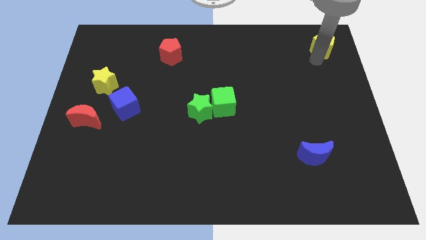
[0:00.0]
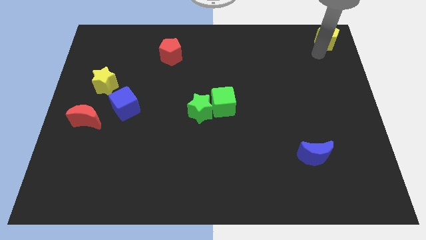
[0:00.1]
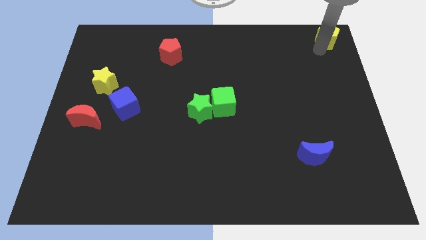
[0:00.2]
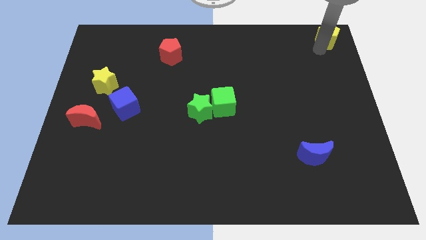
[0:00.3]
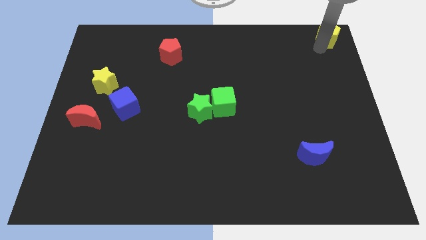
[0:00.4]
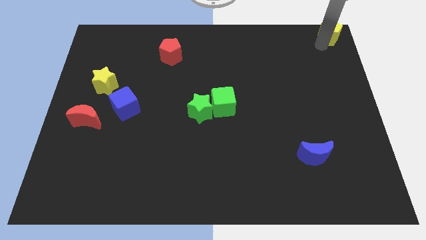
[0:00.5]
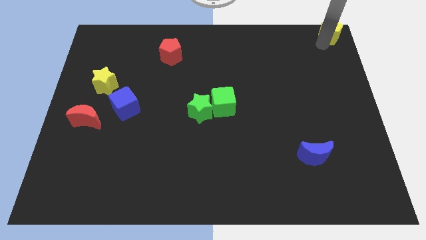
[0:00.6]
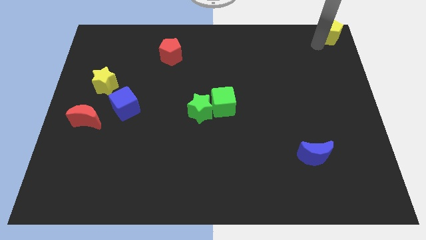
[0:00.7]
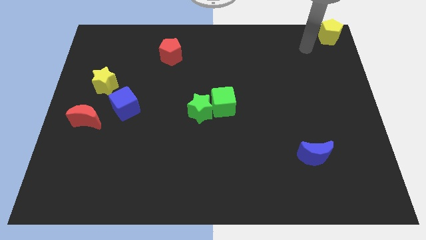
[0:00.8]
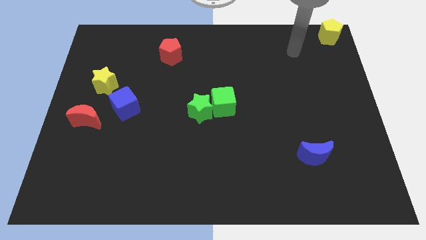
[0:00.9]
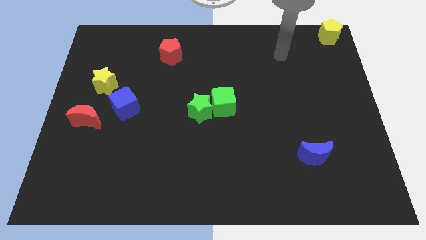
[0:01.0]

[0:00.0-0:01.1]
push the yellow pentagon to the top right of the board

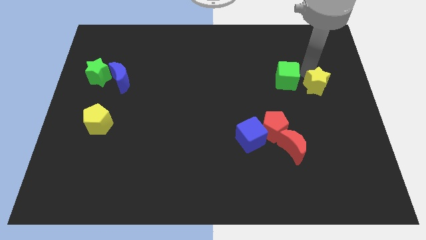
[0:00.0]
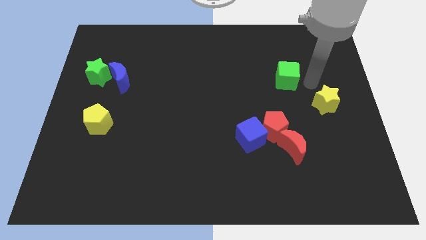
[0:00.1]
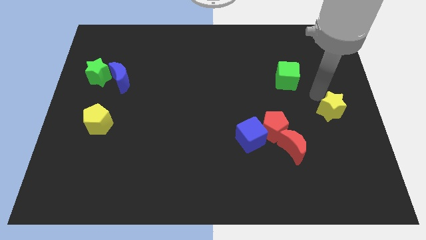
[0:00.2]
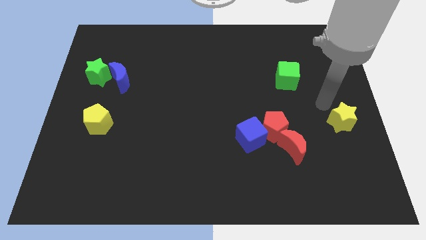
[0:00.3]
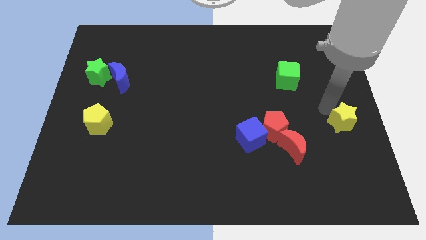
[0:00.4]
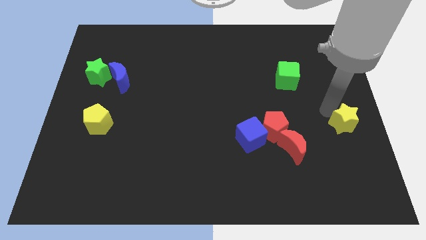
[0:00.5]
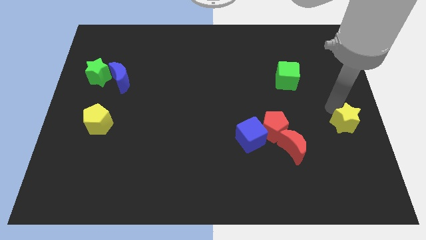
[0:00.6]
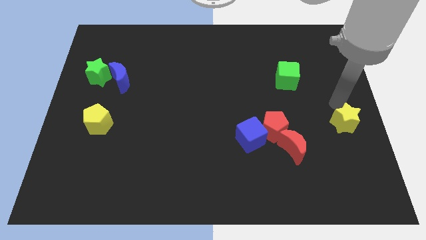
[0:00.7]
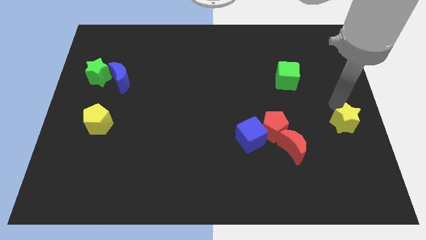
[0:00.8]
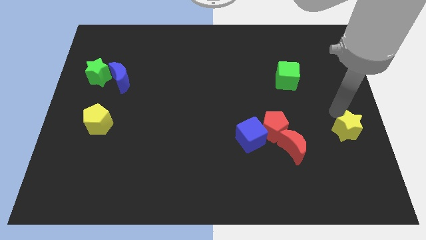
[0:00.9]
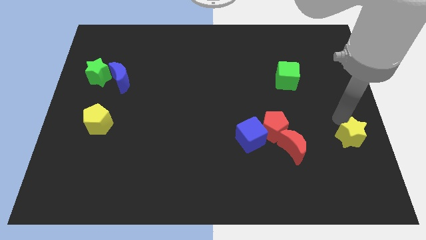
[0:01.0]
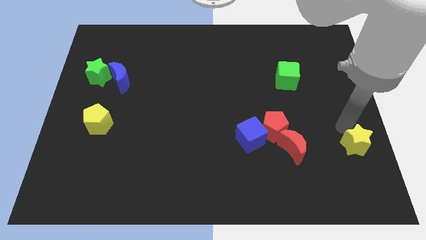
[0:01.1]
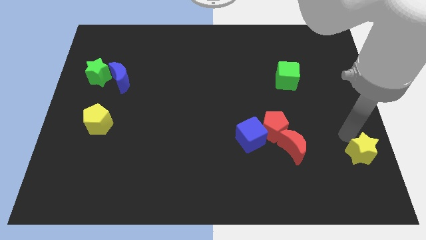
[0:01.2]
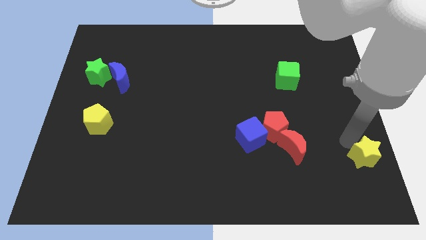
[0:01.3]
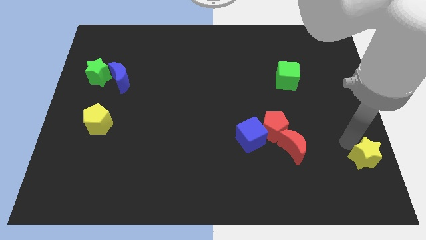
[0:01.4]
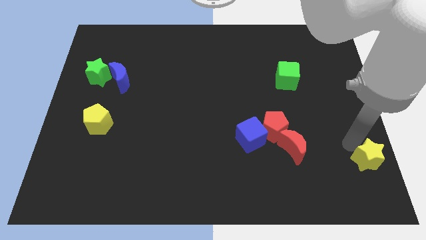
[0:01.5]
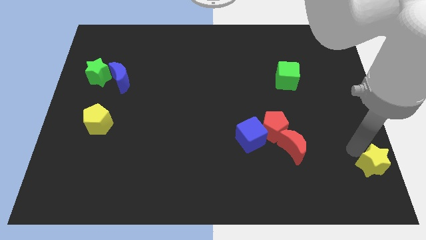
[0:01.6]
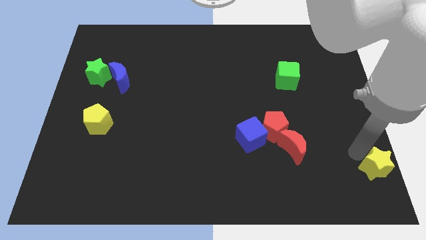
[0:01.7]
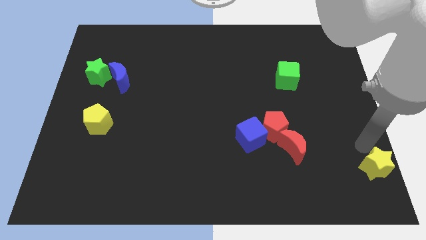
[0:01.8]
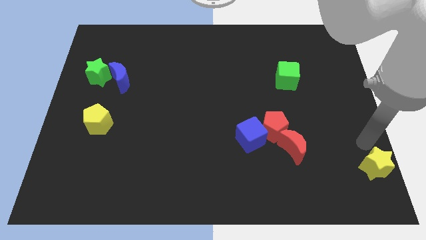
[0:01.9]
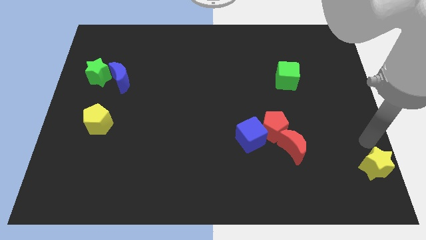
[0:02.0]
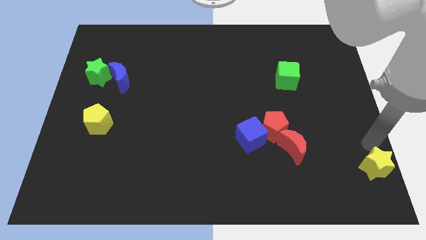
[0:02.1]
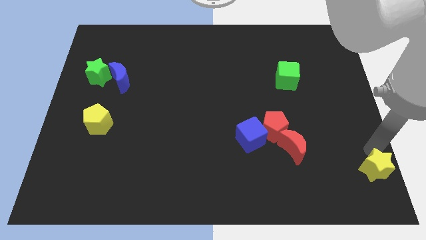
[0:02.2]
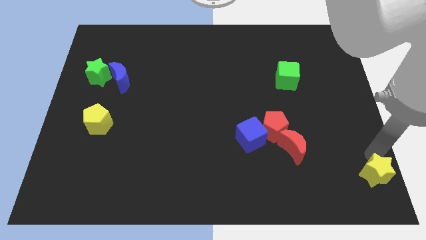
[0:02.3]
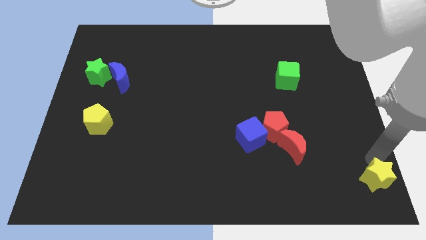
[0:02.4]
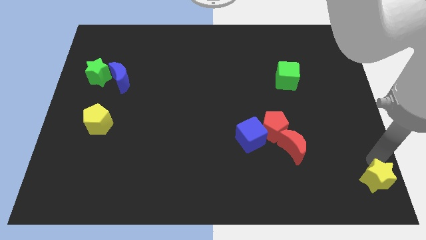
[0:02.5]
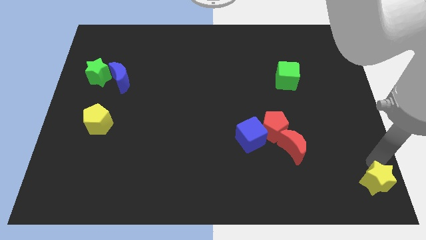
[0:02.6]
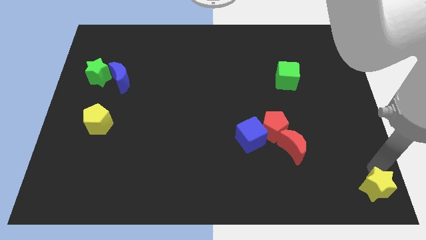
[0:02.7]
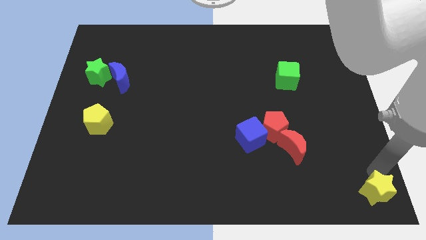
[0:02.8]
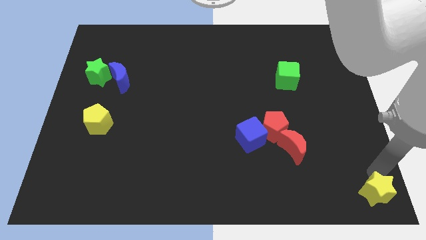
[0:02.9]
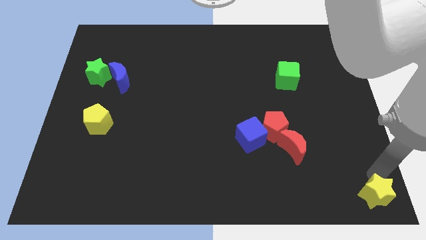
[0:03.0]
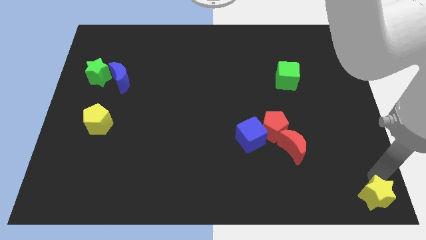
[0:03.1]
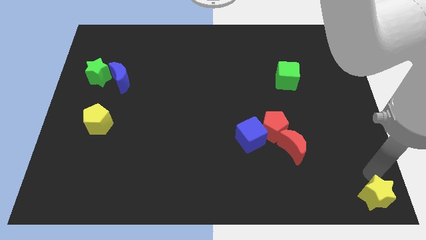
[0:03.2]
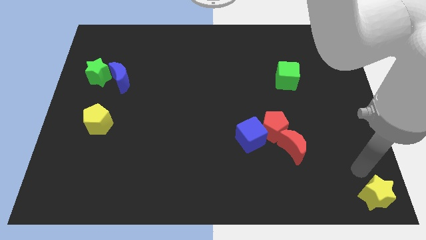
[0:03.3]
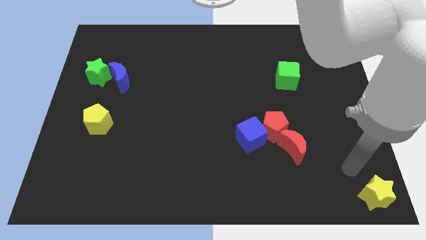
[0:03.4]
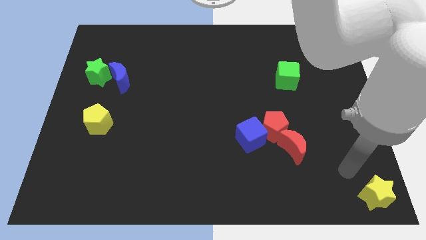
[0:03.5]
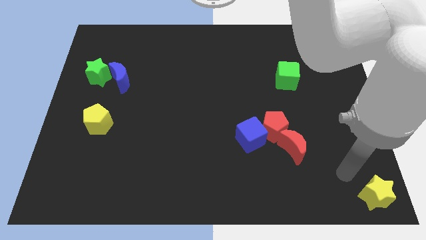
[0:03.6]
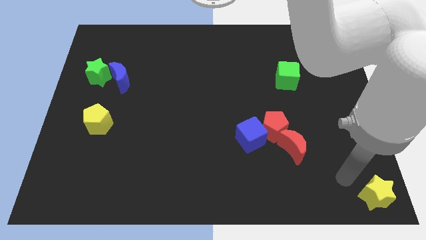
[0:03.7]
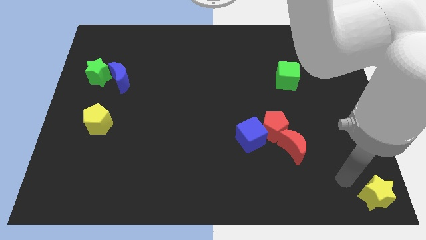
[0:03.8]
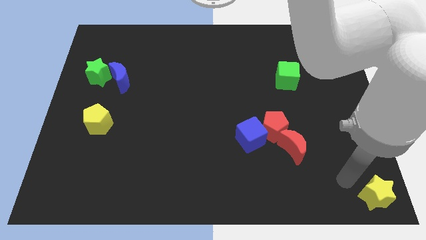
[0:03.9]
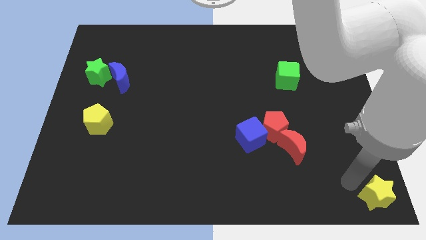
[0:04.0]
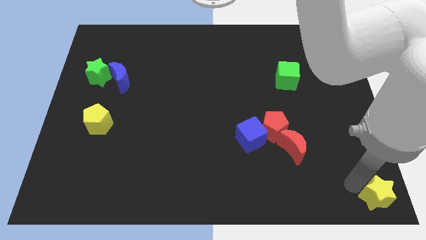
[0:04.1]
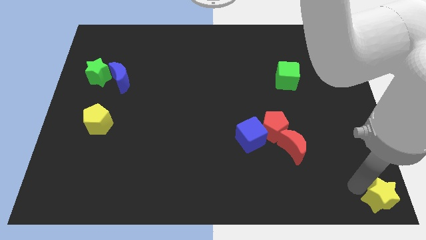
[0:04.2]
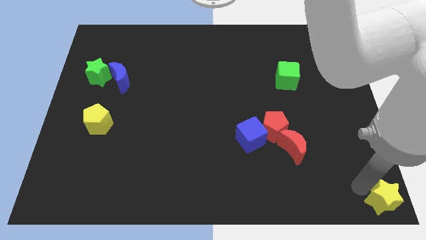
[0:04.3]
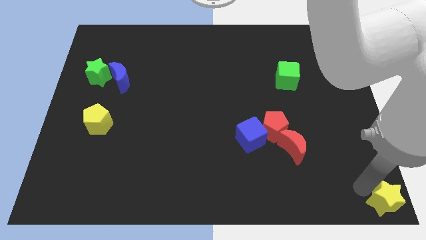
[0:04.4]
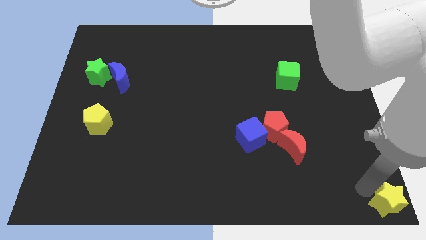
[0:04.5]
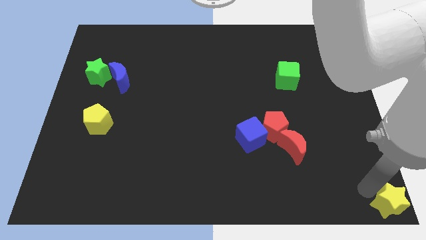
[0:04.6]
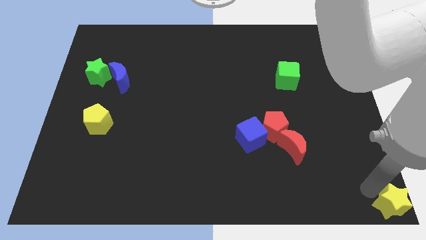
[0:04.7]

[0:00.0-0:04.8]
place the yellow star at the bottom right corner of the board

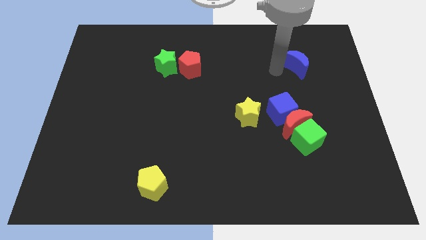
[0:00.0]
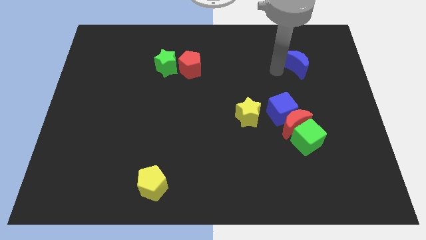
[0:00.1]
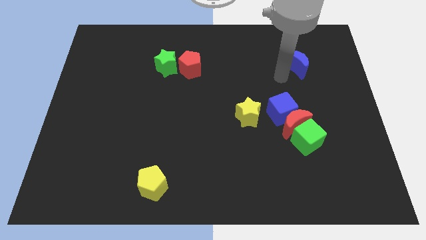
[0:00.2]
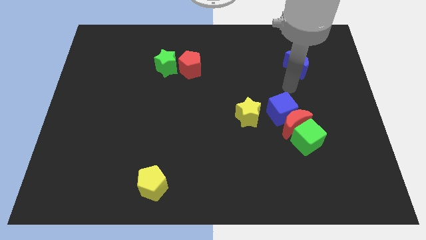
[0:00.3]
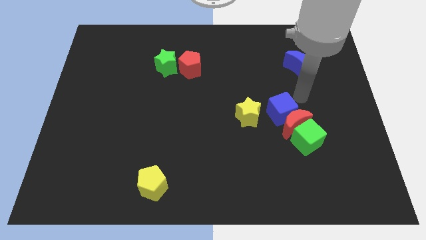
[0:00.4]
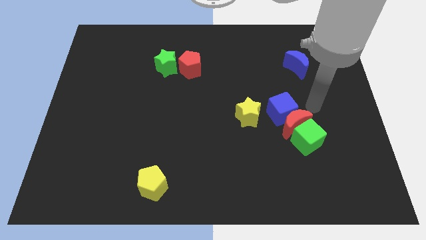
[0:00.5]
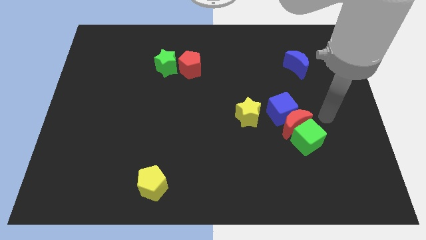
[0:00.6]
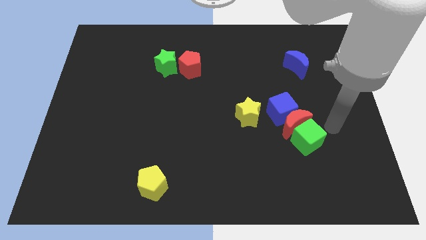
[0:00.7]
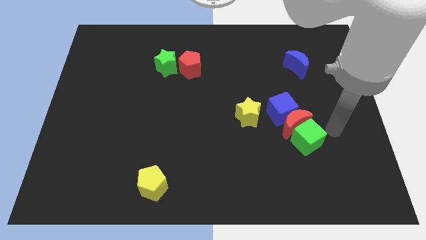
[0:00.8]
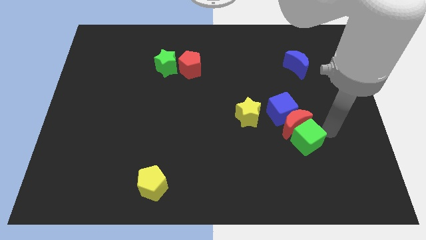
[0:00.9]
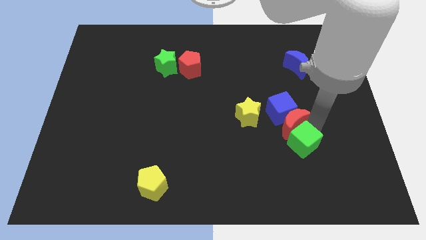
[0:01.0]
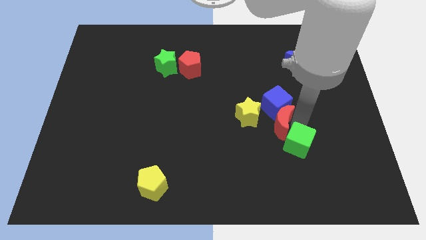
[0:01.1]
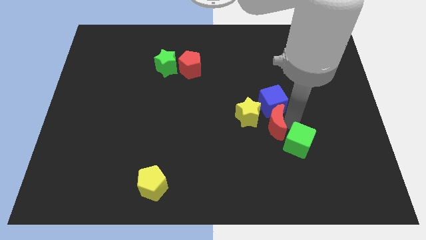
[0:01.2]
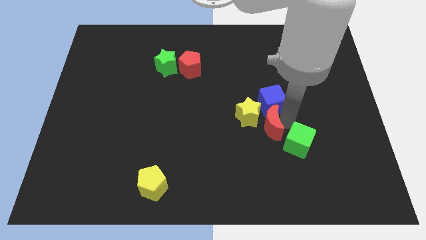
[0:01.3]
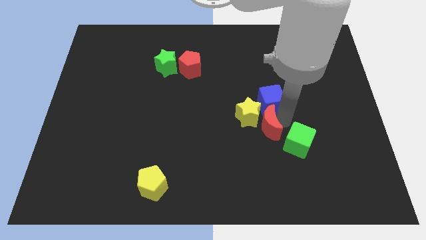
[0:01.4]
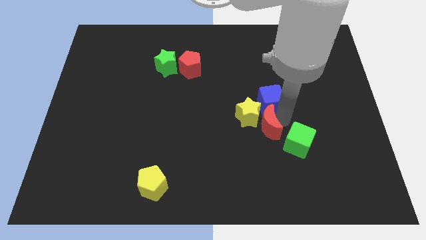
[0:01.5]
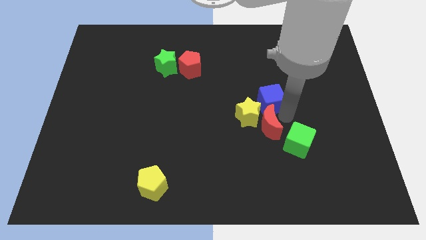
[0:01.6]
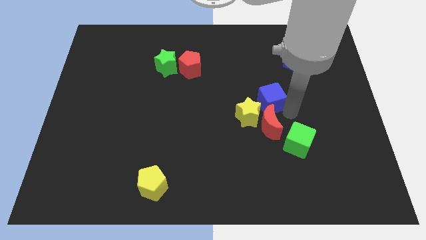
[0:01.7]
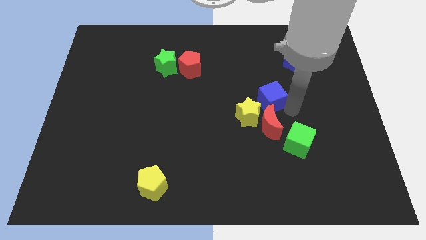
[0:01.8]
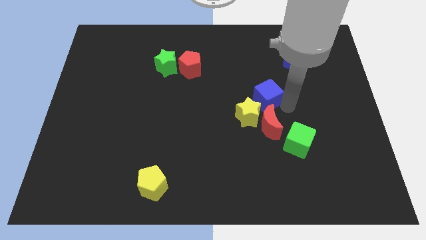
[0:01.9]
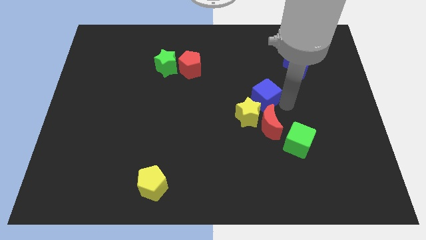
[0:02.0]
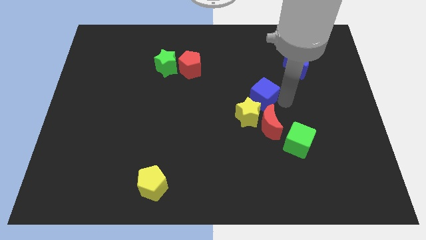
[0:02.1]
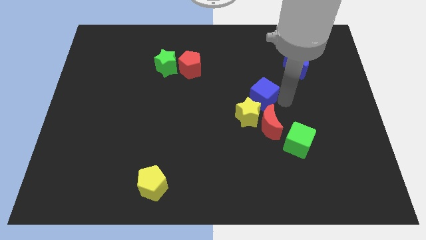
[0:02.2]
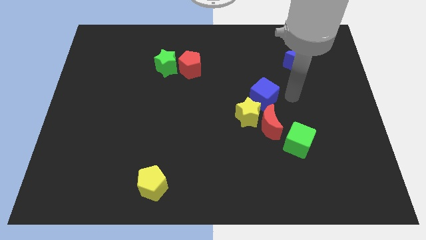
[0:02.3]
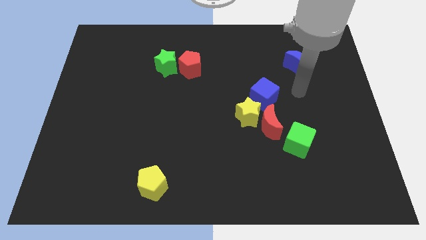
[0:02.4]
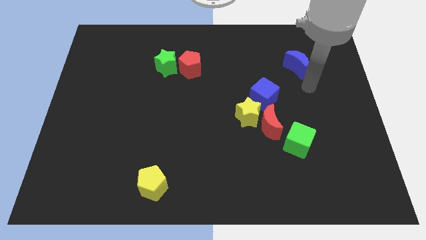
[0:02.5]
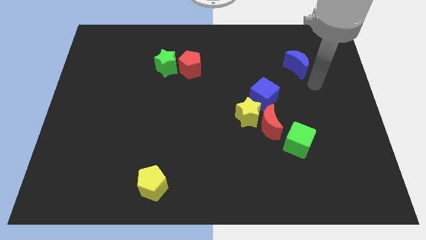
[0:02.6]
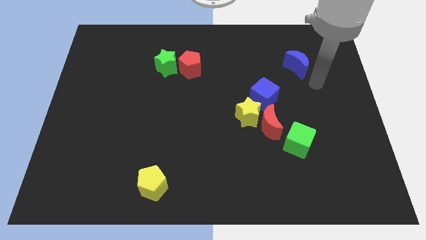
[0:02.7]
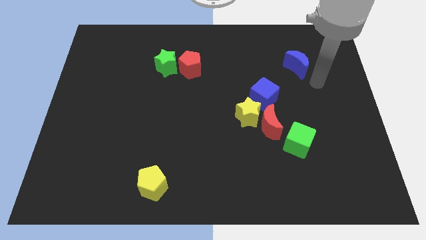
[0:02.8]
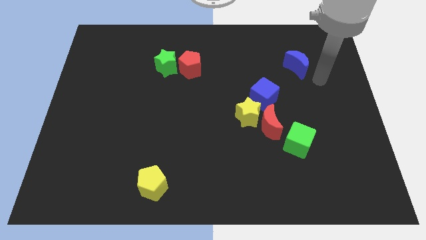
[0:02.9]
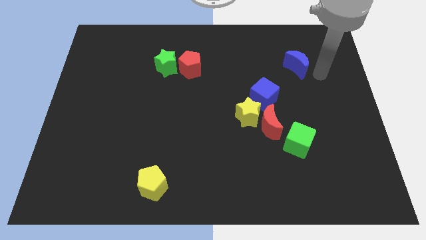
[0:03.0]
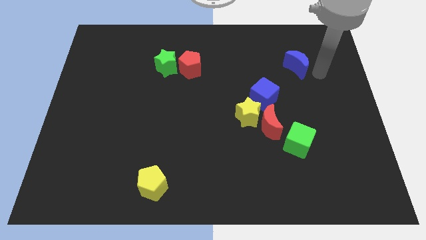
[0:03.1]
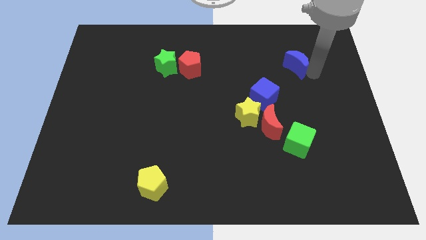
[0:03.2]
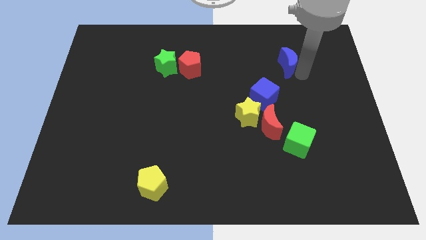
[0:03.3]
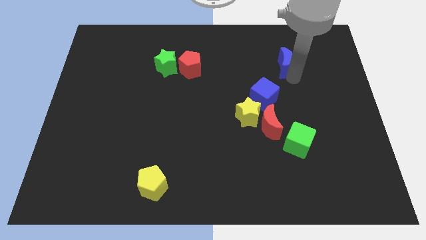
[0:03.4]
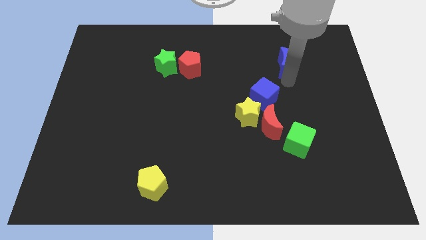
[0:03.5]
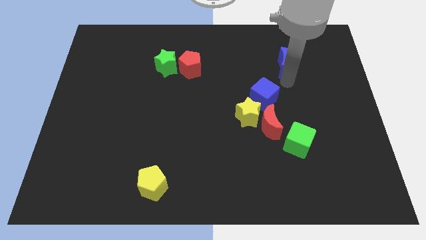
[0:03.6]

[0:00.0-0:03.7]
move red crescent and blue cube towards the yellow star
